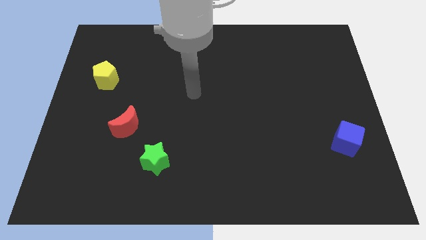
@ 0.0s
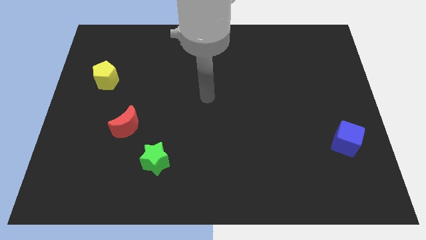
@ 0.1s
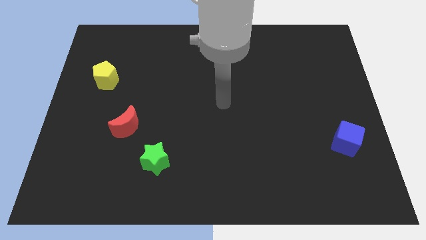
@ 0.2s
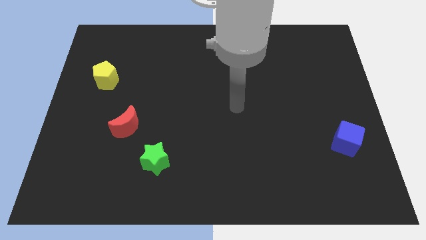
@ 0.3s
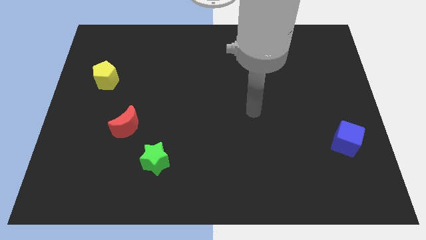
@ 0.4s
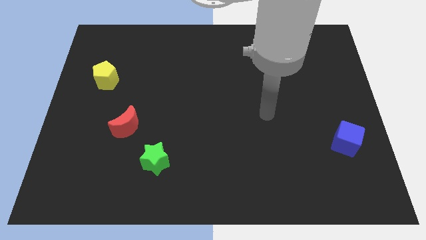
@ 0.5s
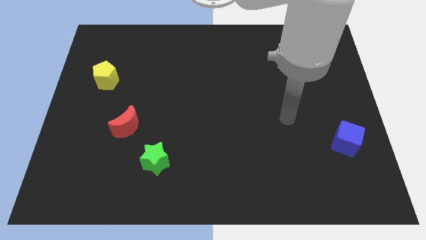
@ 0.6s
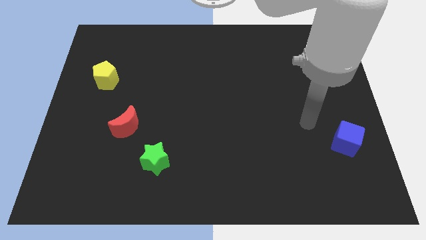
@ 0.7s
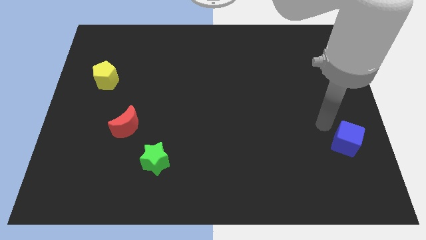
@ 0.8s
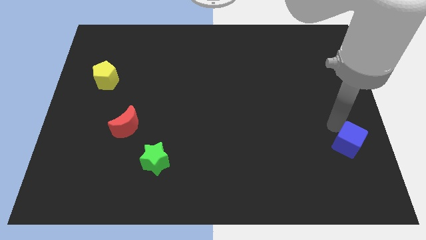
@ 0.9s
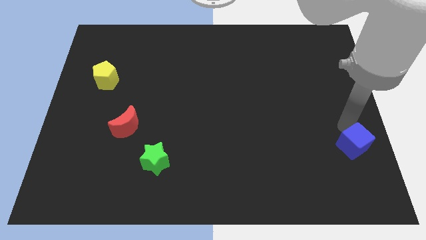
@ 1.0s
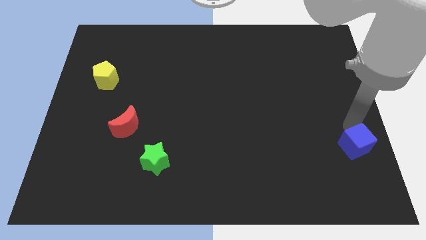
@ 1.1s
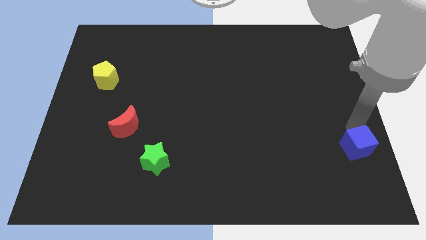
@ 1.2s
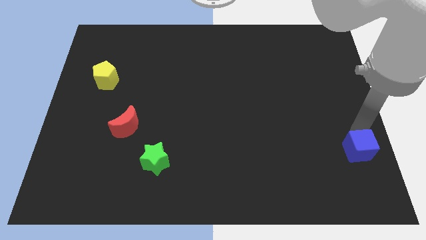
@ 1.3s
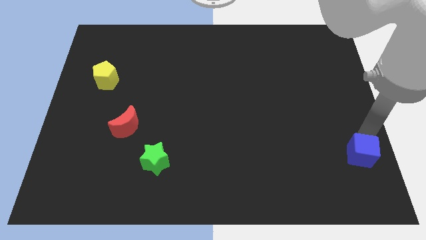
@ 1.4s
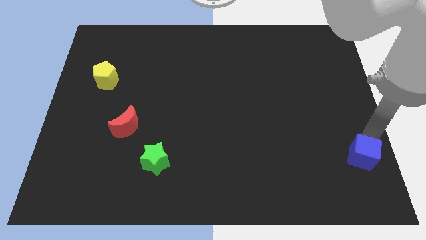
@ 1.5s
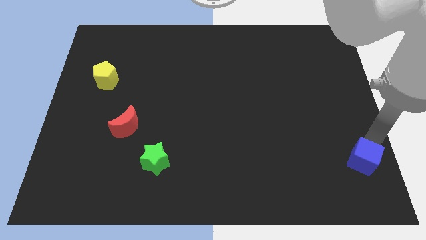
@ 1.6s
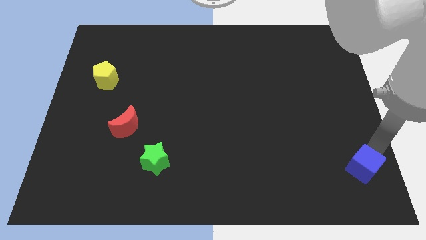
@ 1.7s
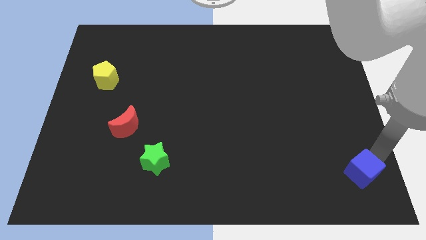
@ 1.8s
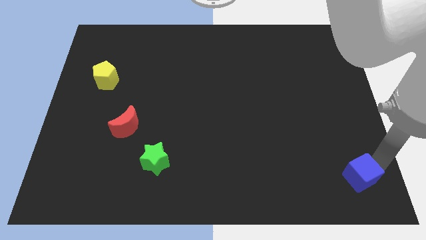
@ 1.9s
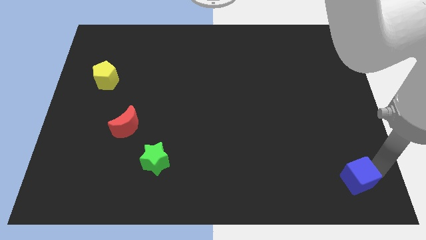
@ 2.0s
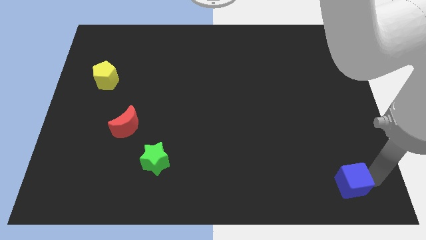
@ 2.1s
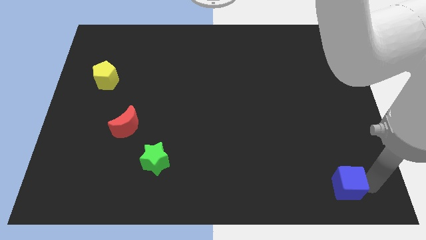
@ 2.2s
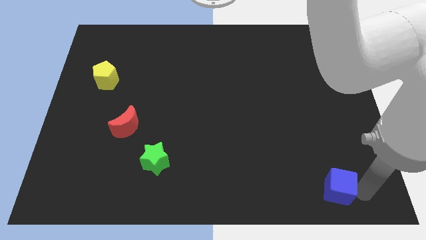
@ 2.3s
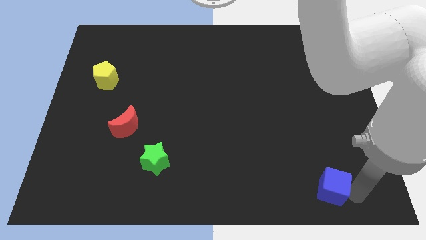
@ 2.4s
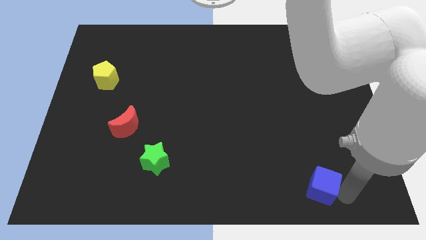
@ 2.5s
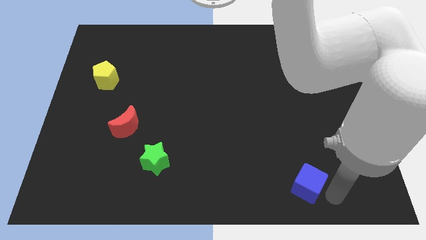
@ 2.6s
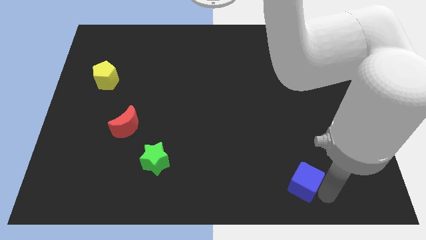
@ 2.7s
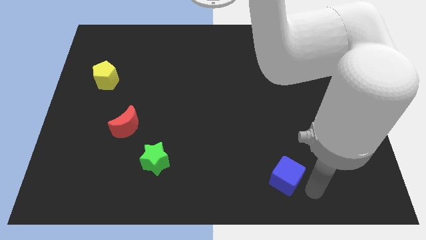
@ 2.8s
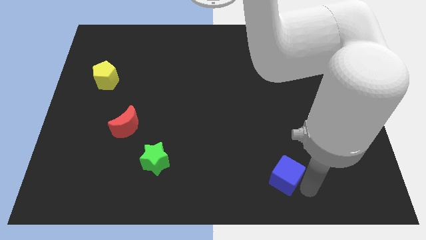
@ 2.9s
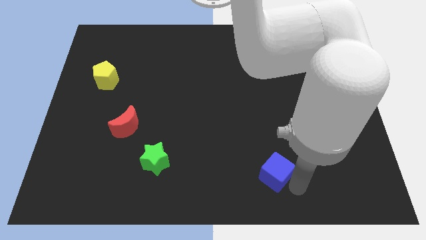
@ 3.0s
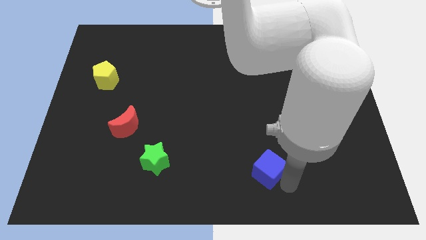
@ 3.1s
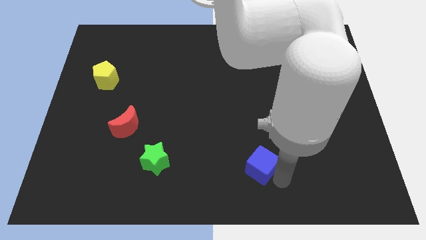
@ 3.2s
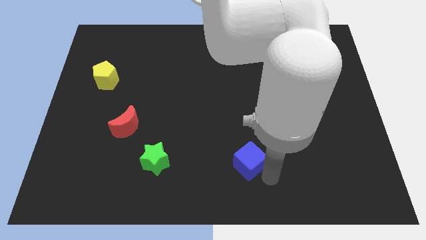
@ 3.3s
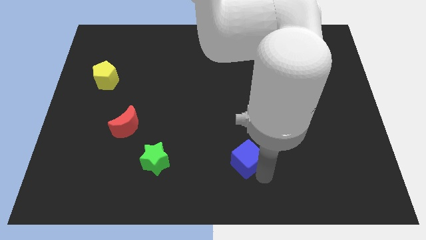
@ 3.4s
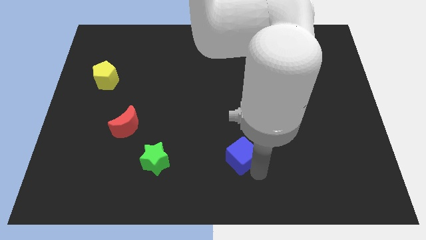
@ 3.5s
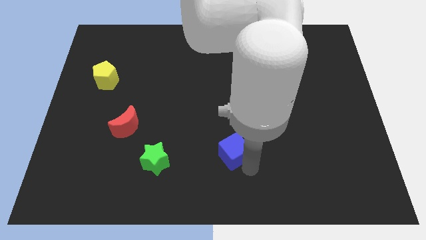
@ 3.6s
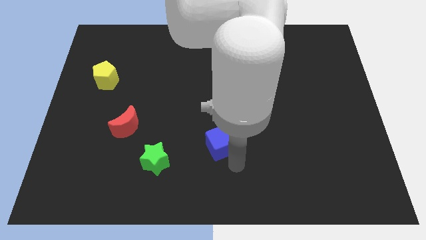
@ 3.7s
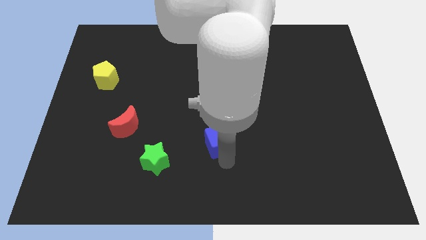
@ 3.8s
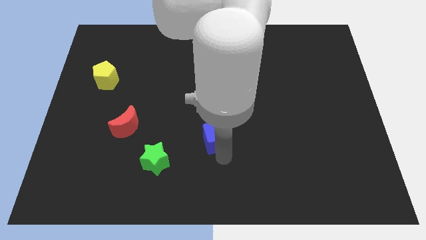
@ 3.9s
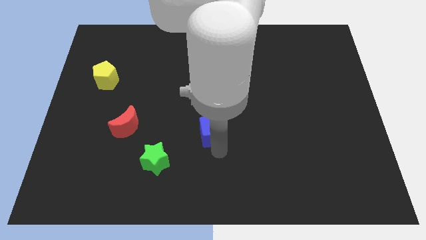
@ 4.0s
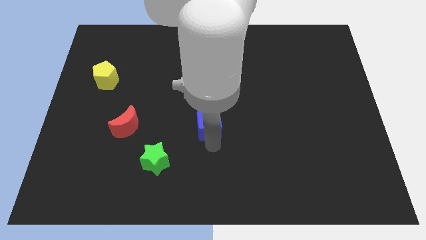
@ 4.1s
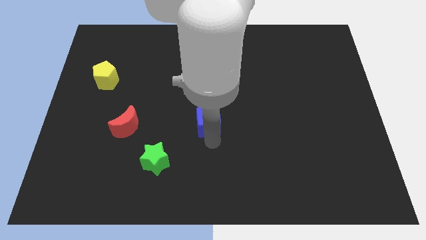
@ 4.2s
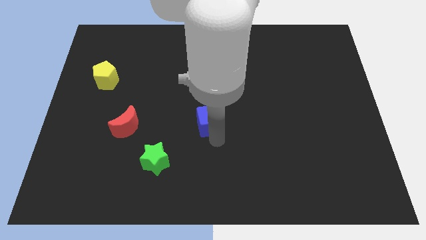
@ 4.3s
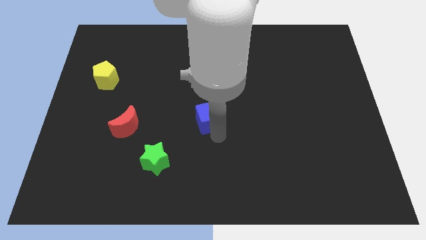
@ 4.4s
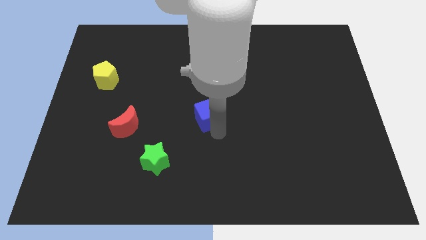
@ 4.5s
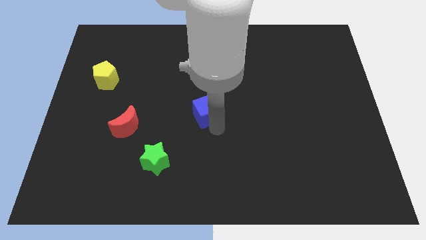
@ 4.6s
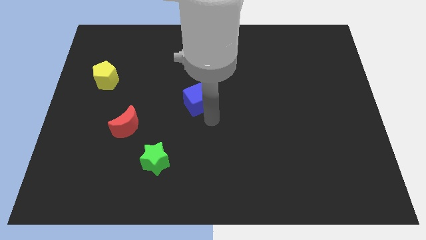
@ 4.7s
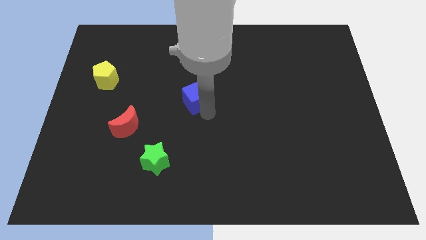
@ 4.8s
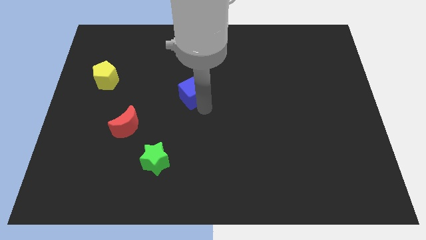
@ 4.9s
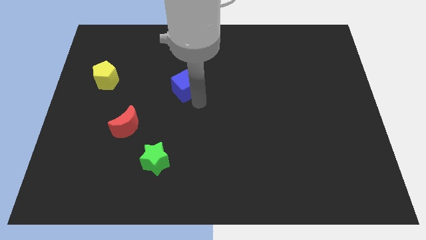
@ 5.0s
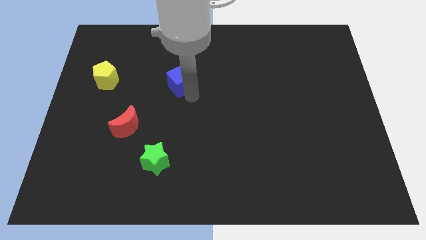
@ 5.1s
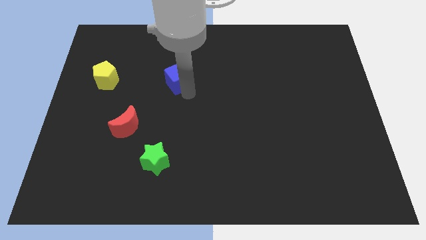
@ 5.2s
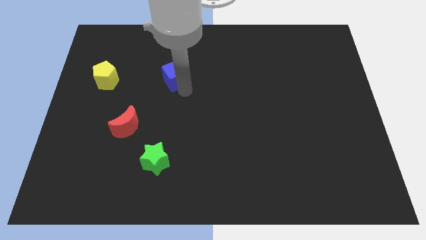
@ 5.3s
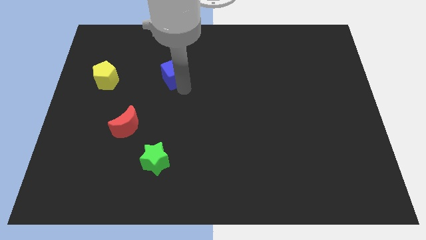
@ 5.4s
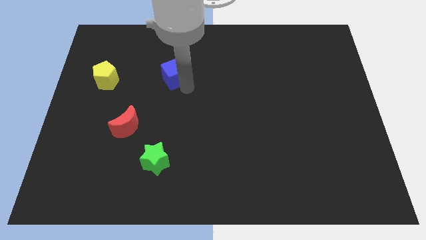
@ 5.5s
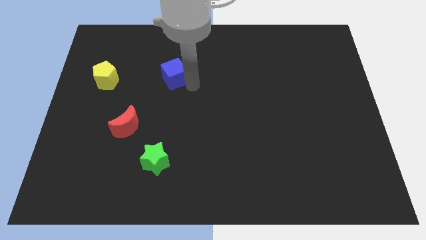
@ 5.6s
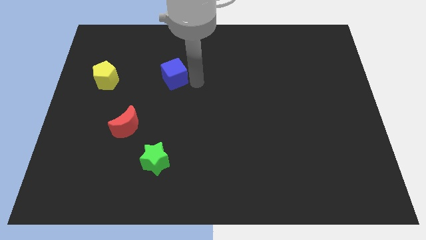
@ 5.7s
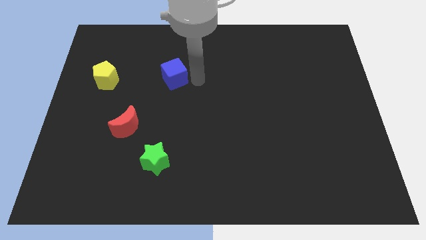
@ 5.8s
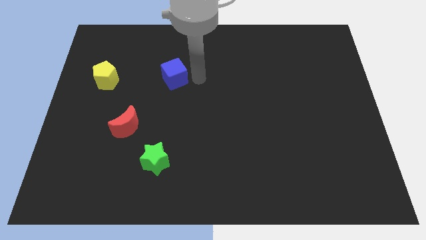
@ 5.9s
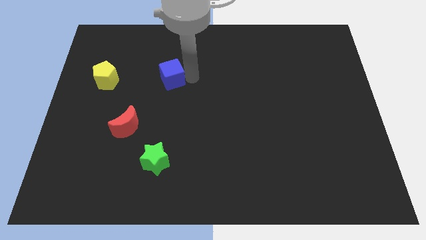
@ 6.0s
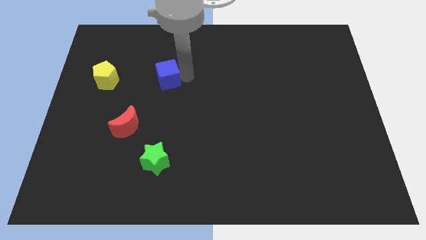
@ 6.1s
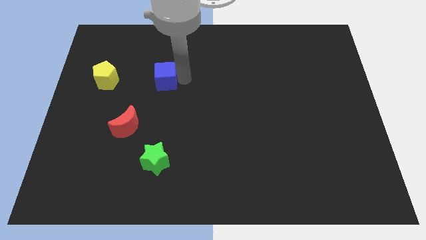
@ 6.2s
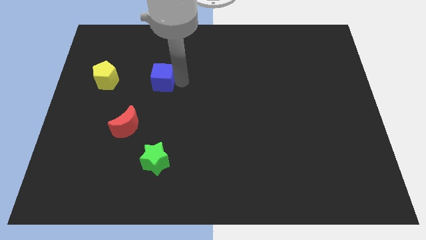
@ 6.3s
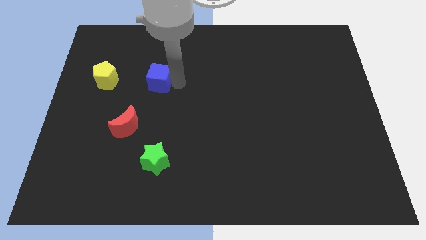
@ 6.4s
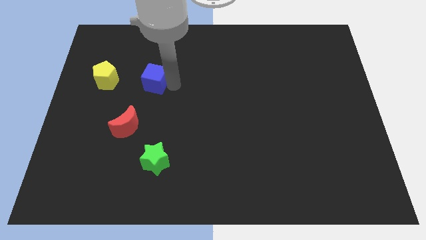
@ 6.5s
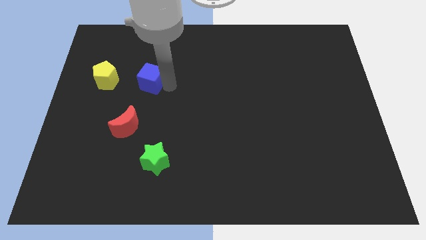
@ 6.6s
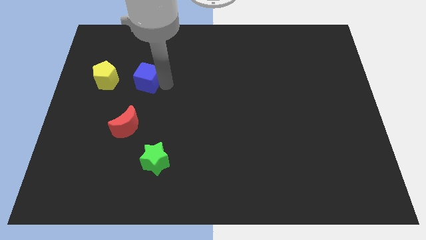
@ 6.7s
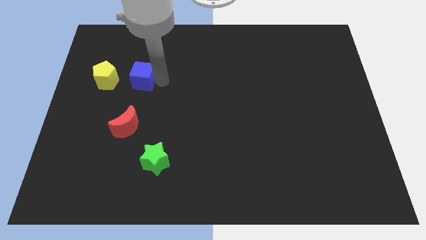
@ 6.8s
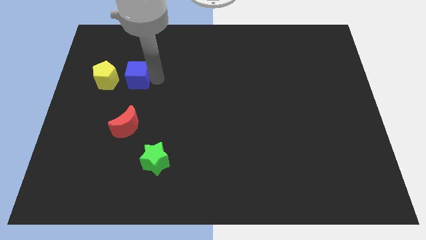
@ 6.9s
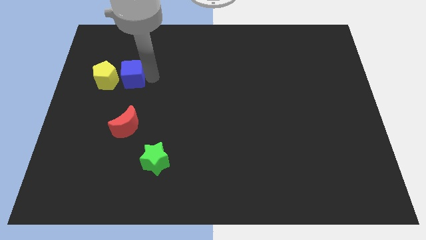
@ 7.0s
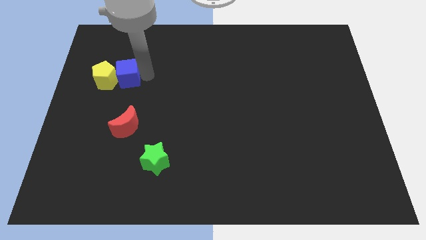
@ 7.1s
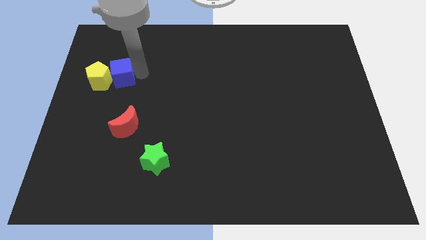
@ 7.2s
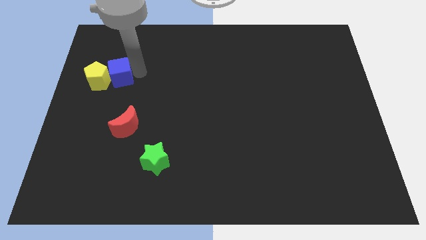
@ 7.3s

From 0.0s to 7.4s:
slide the blue block to the yellow block

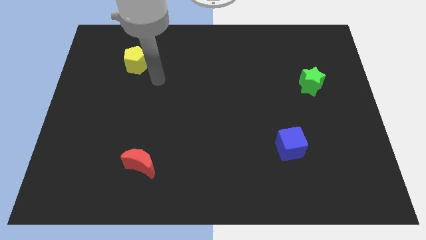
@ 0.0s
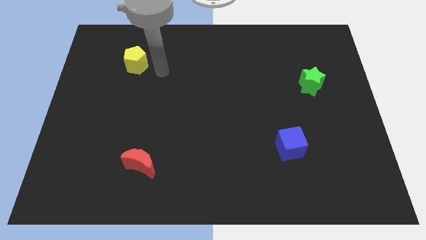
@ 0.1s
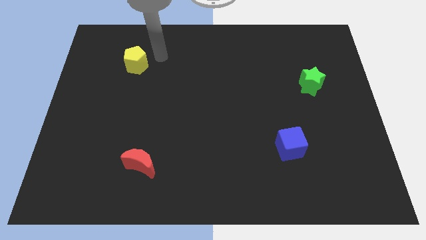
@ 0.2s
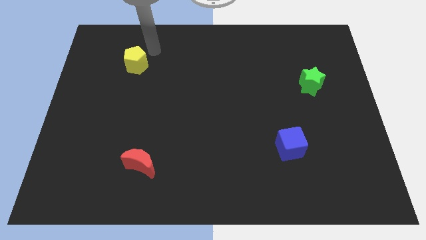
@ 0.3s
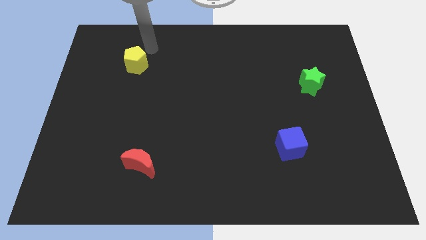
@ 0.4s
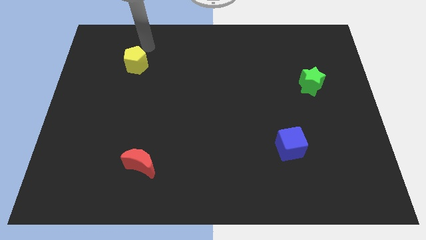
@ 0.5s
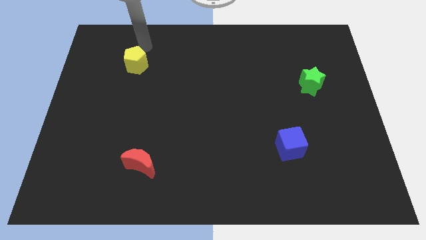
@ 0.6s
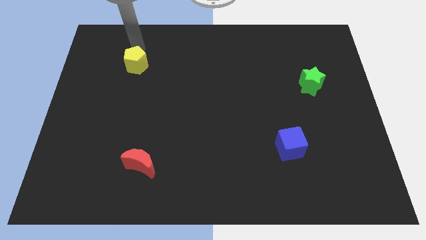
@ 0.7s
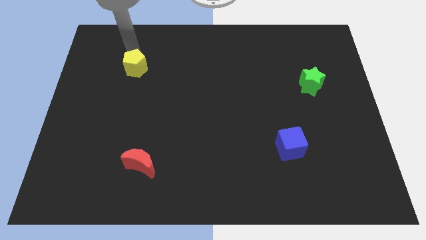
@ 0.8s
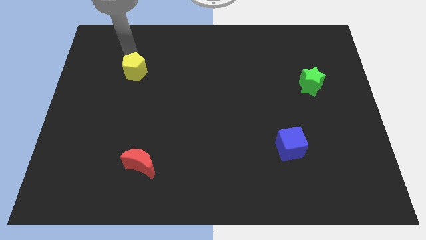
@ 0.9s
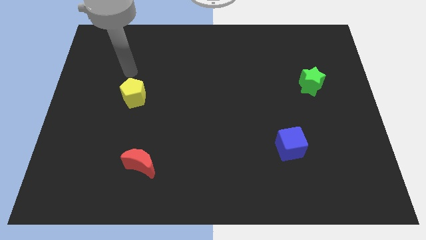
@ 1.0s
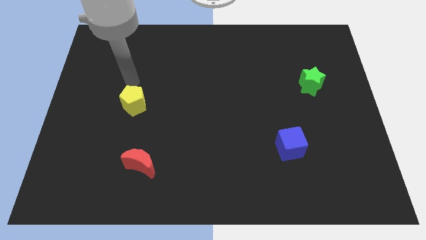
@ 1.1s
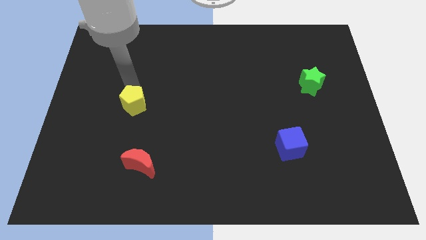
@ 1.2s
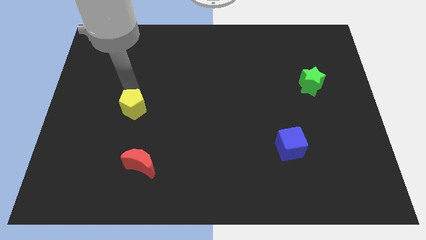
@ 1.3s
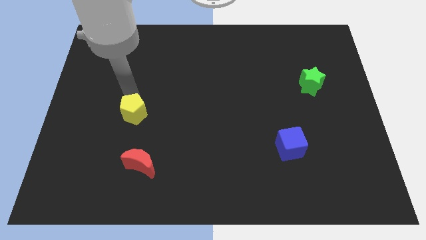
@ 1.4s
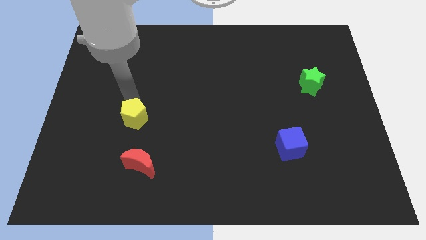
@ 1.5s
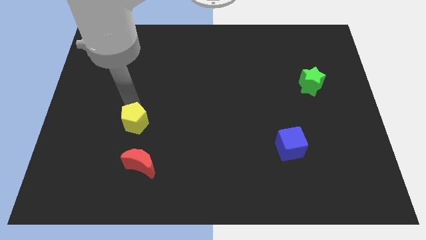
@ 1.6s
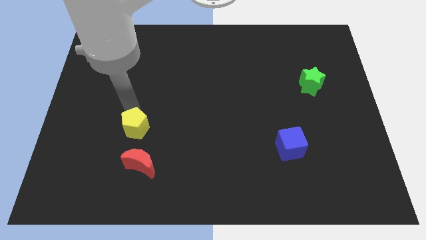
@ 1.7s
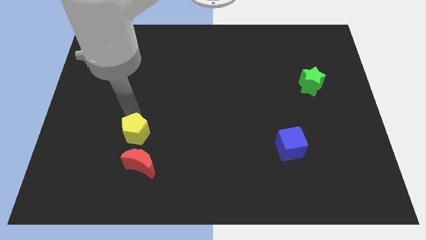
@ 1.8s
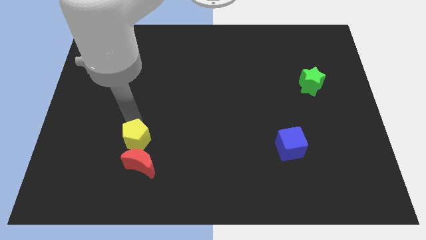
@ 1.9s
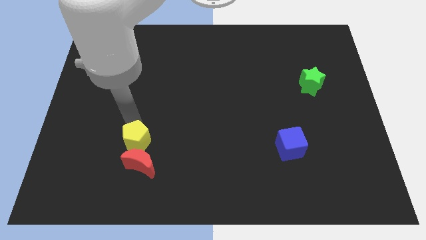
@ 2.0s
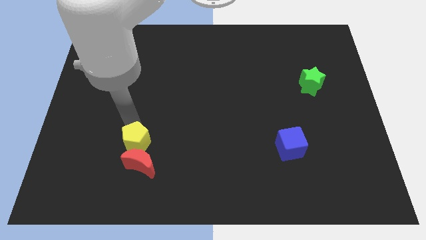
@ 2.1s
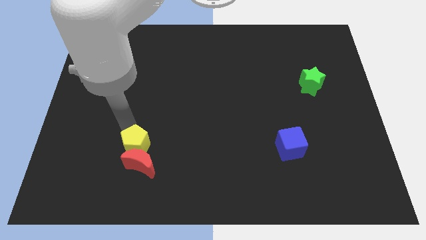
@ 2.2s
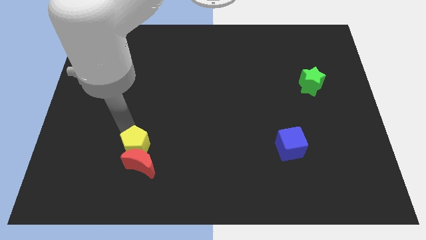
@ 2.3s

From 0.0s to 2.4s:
slide the yellow block next to the moon
